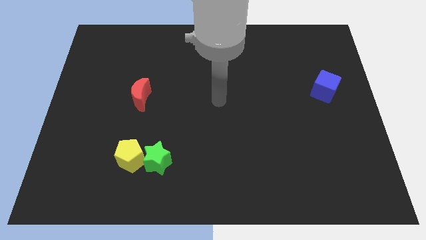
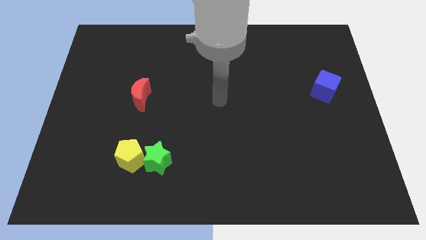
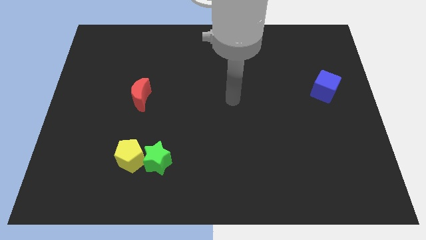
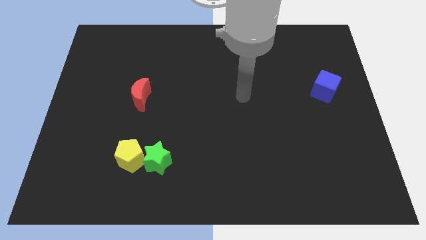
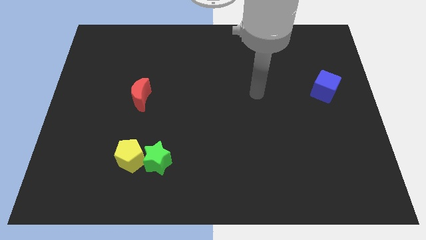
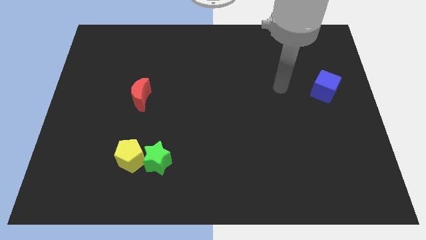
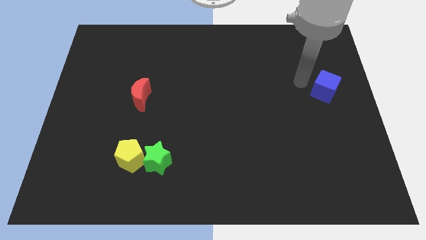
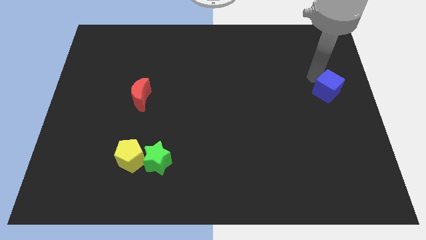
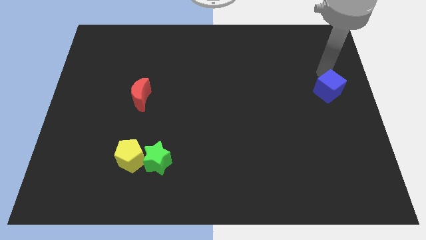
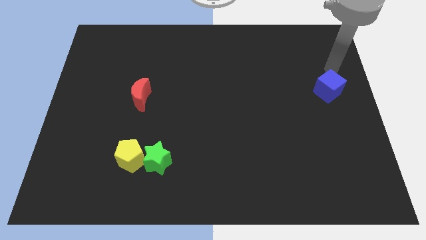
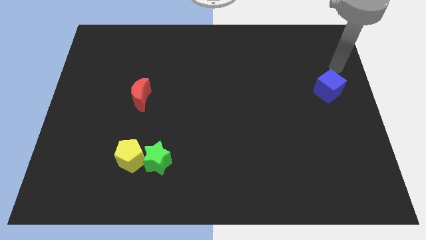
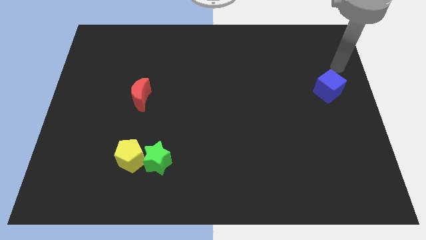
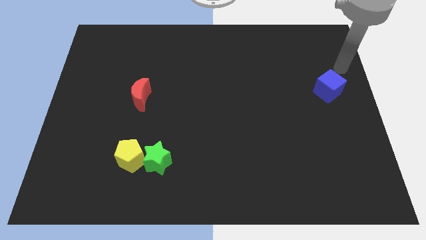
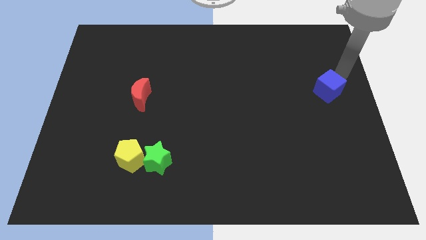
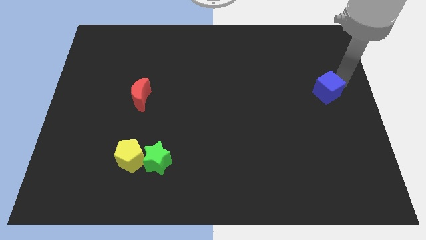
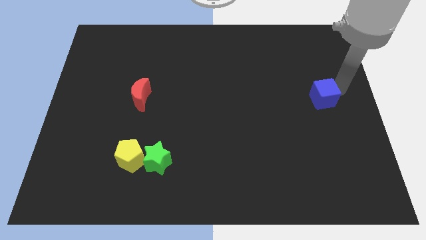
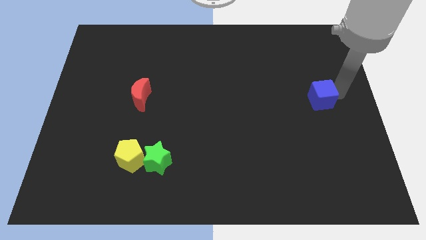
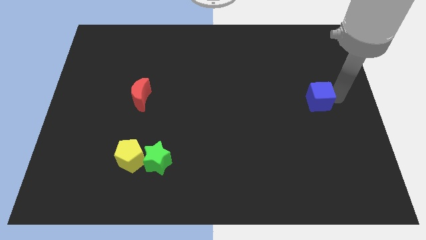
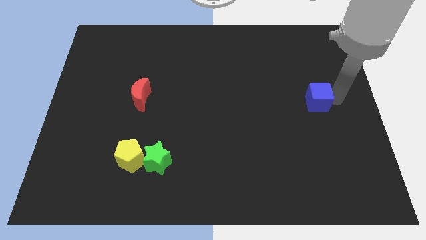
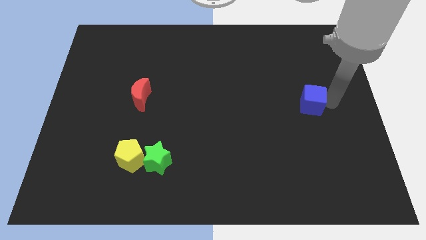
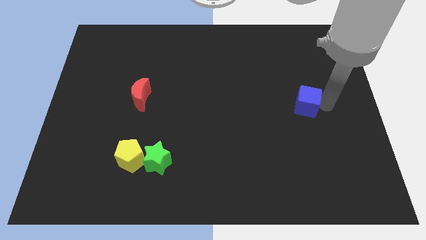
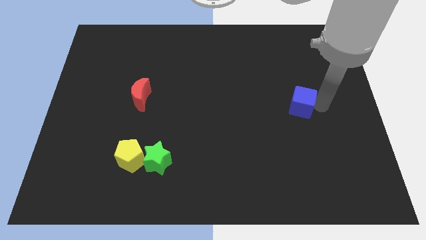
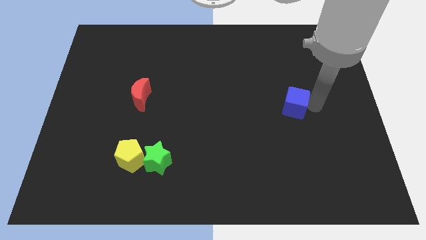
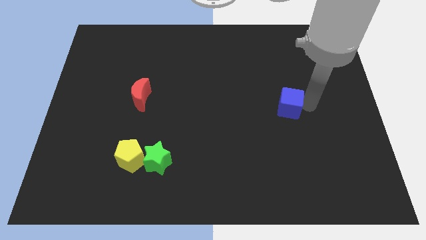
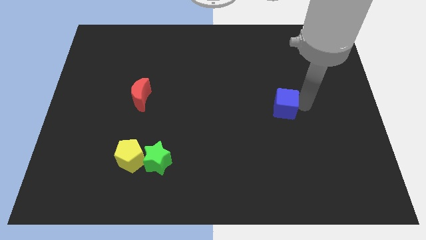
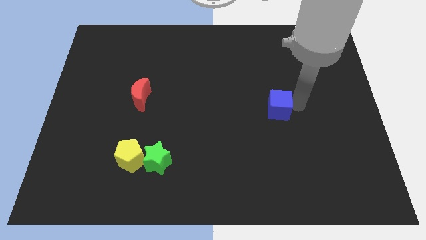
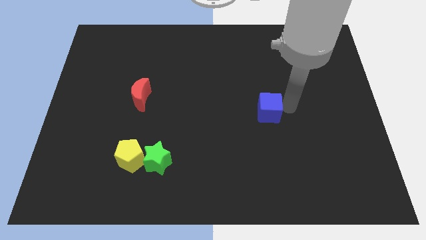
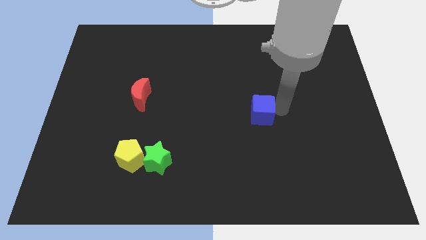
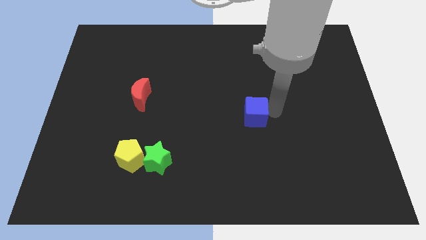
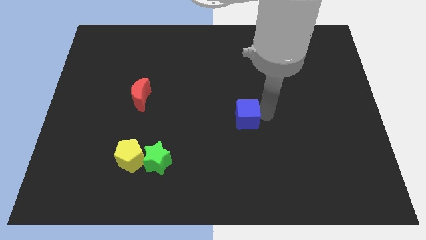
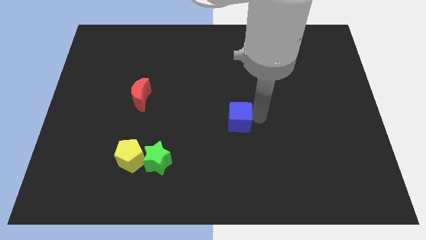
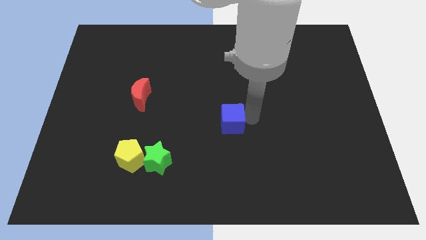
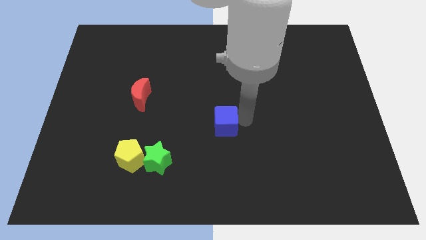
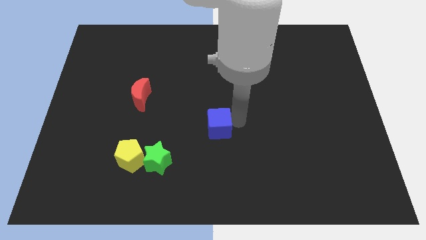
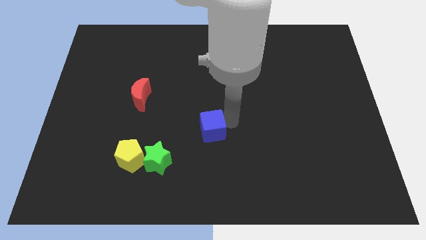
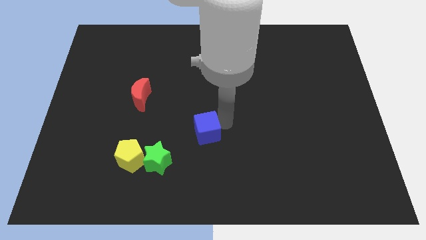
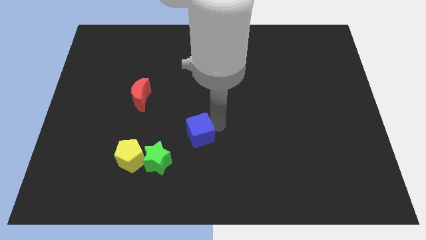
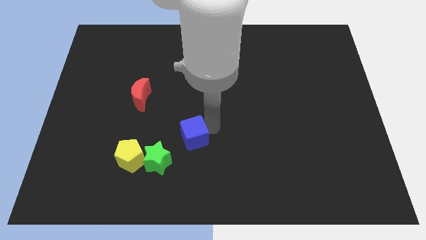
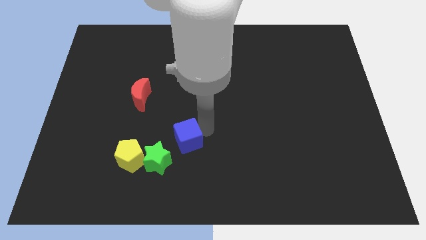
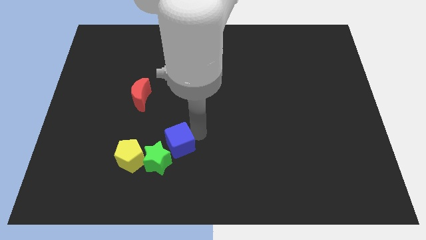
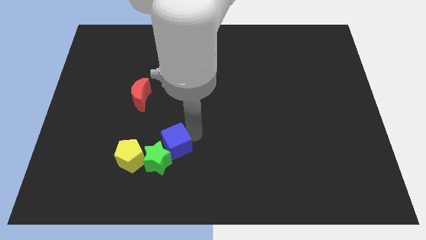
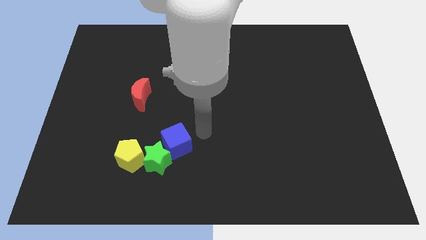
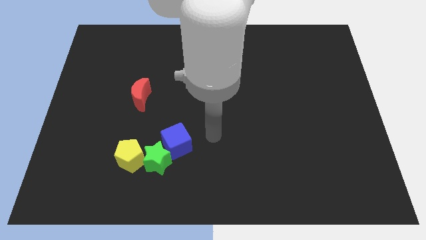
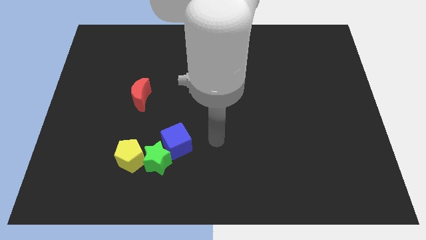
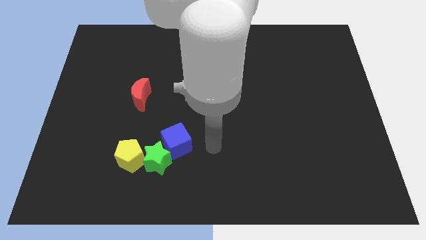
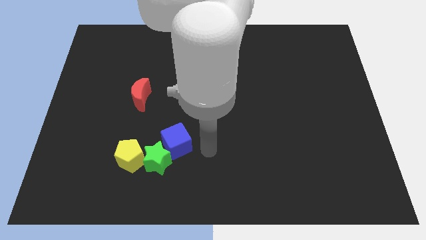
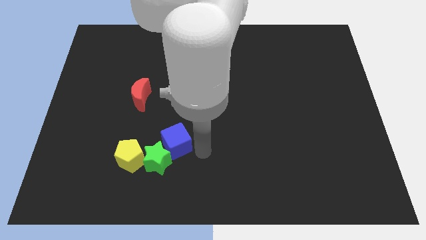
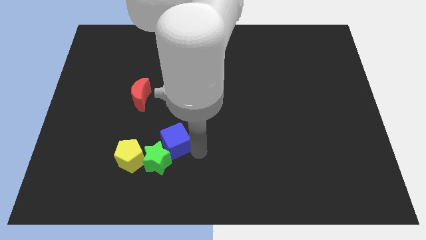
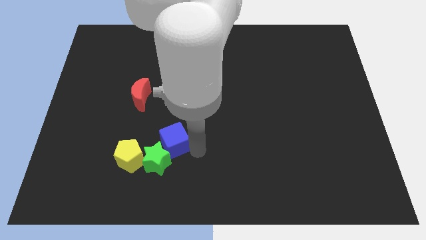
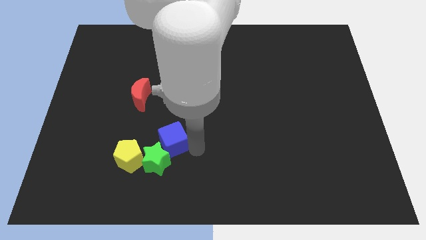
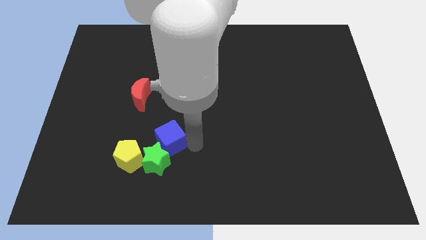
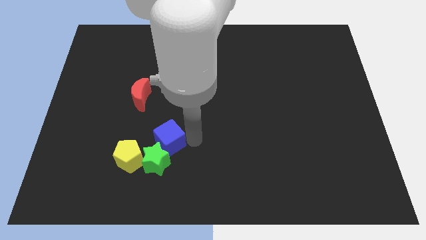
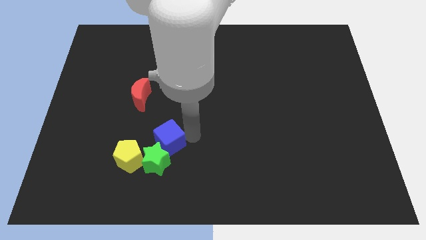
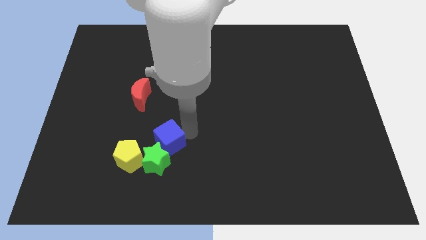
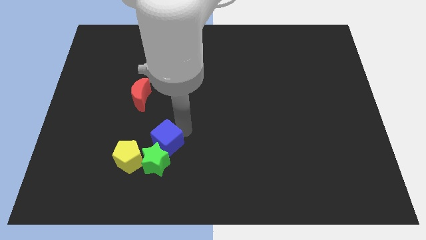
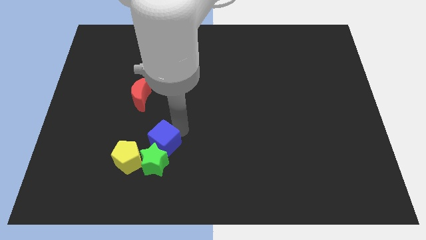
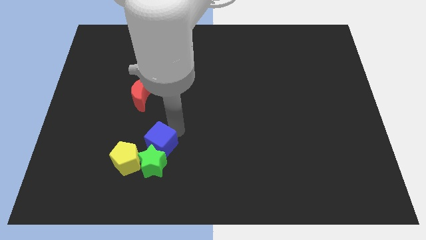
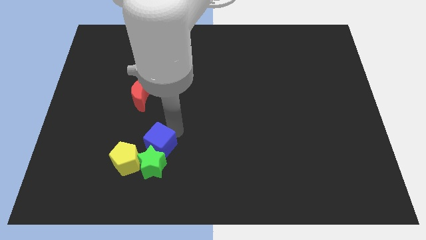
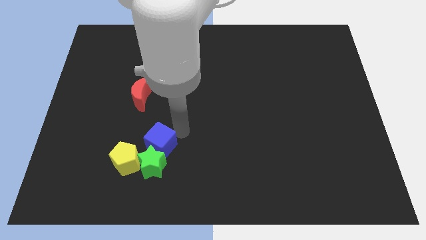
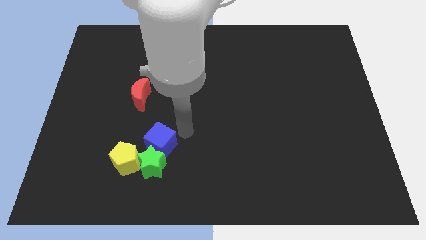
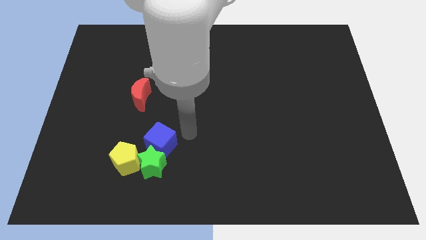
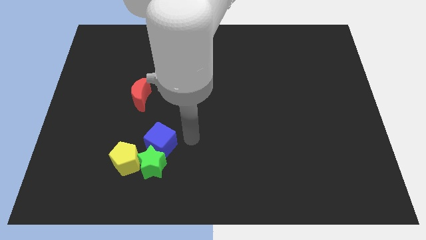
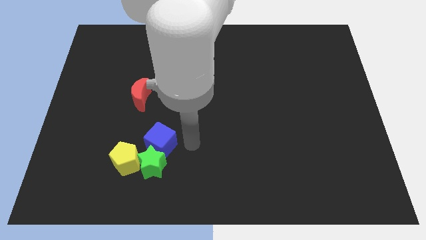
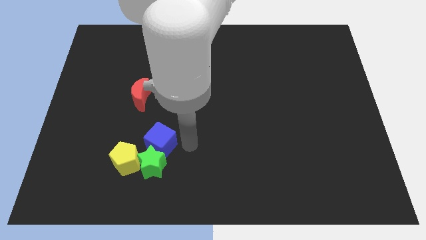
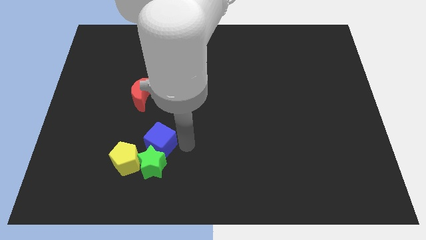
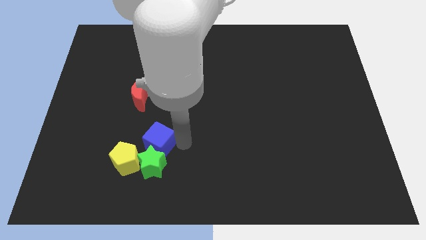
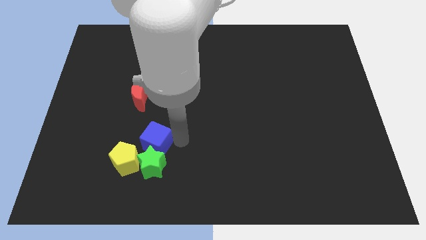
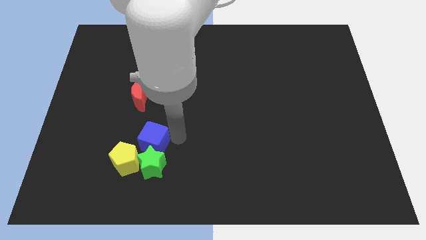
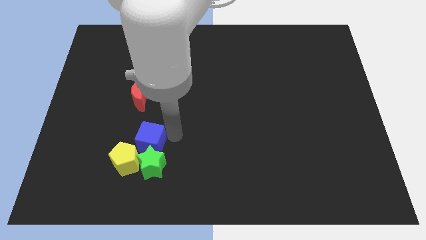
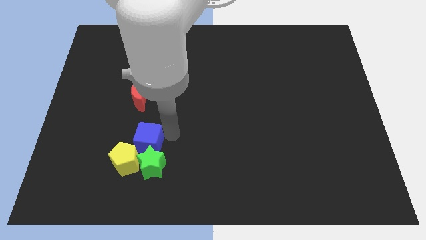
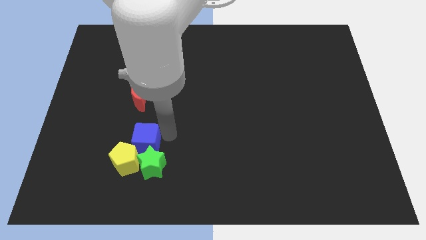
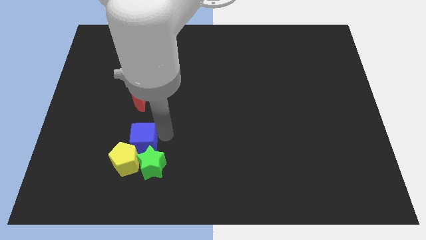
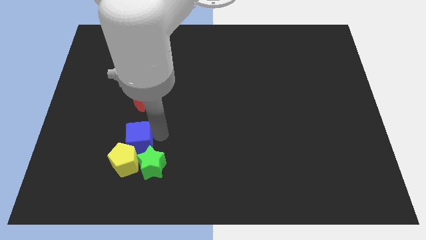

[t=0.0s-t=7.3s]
slide the blue cube close to the yellow block

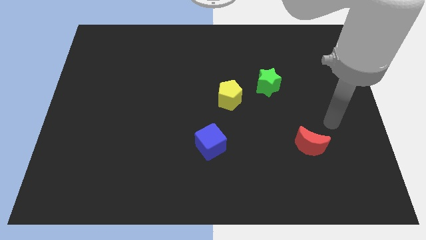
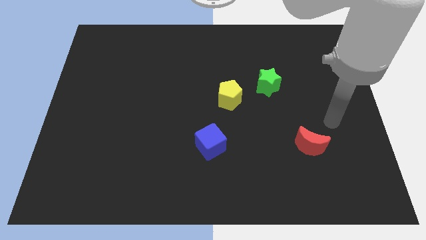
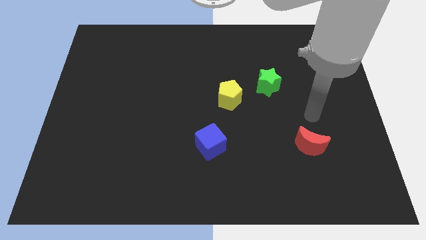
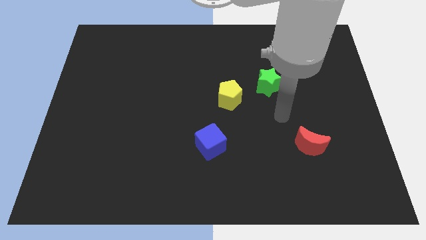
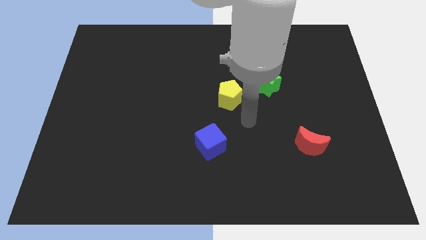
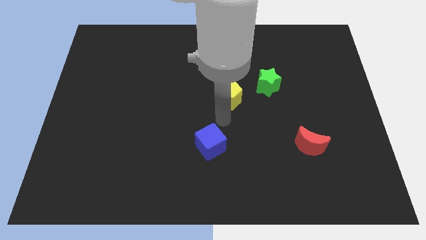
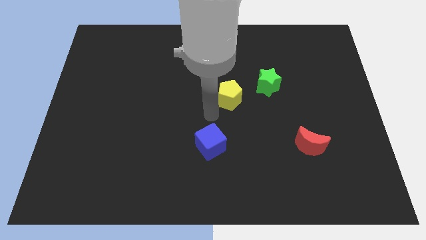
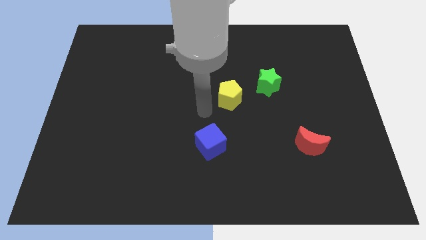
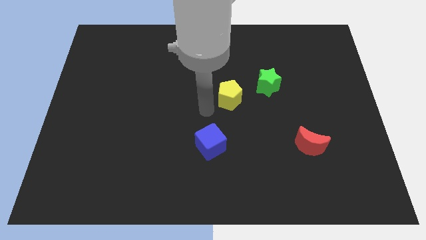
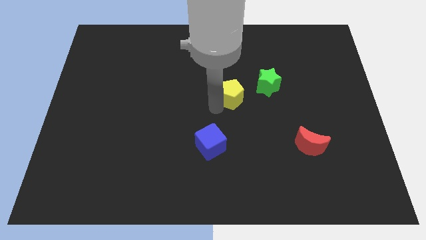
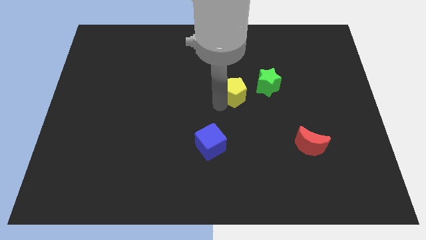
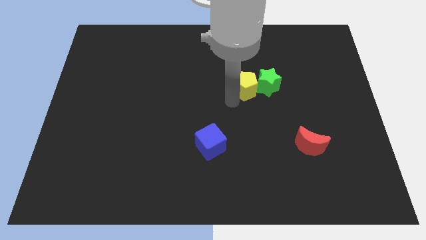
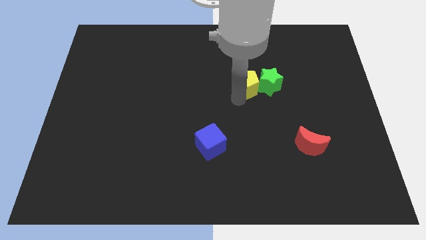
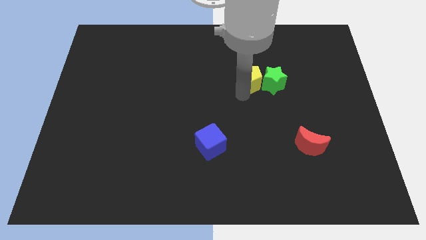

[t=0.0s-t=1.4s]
slide the yellow pentagon next to the green star
